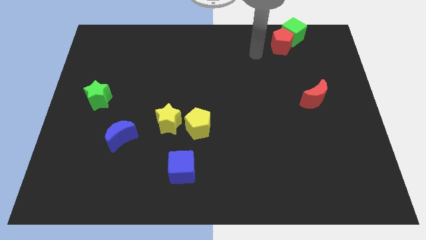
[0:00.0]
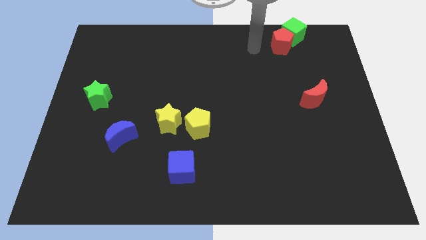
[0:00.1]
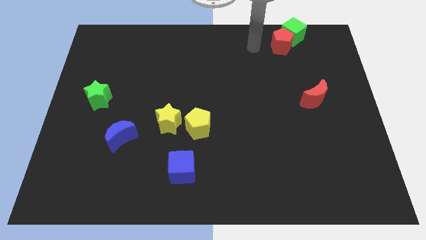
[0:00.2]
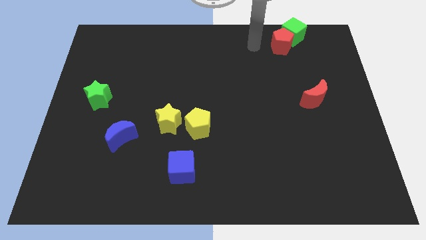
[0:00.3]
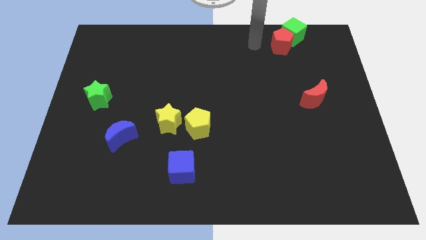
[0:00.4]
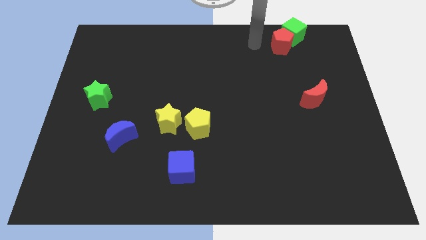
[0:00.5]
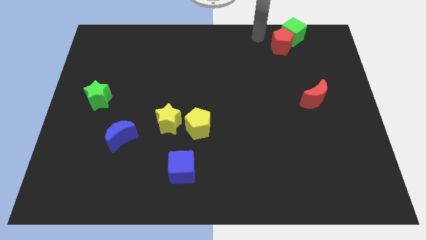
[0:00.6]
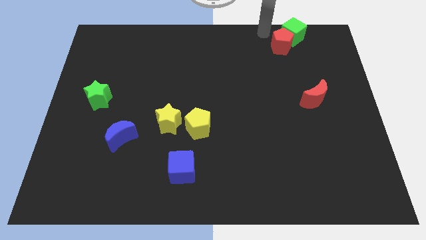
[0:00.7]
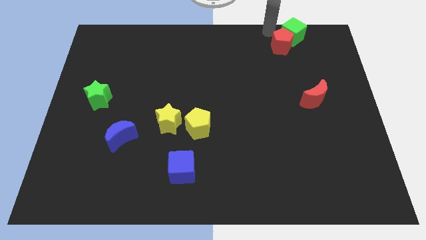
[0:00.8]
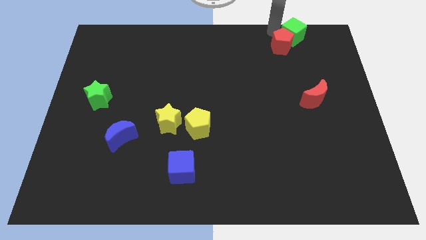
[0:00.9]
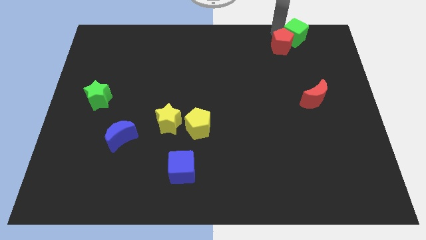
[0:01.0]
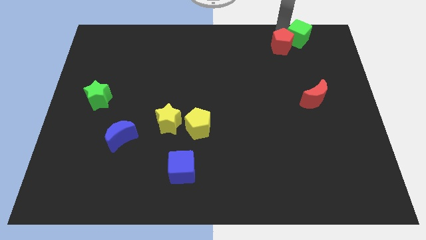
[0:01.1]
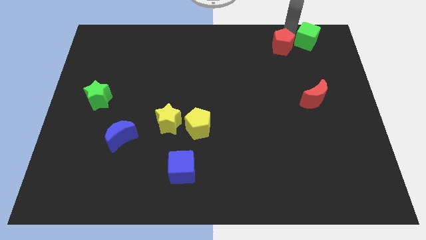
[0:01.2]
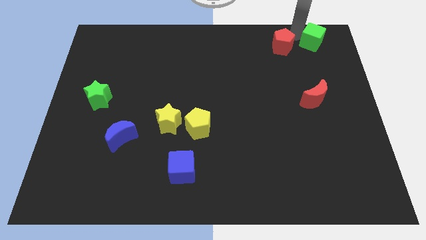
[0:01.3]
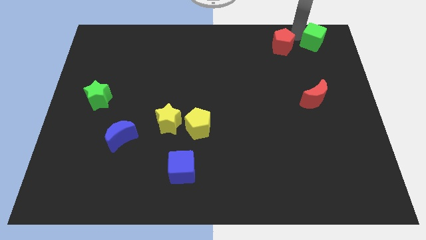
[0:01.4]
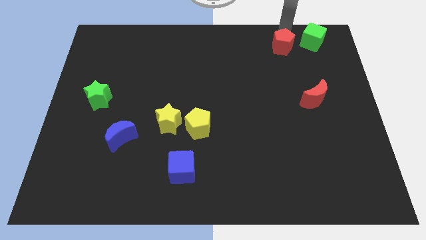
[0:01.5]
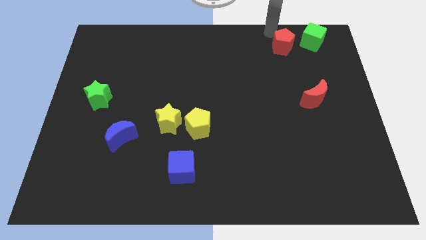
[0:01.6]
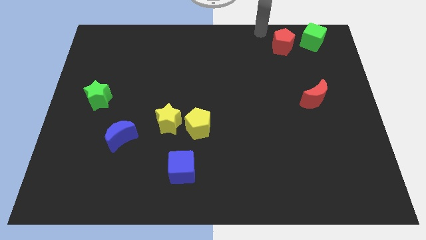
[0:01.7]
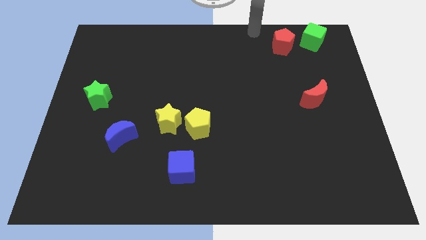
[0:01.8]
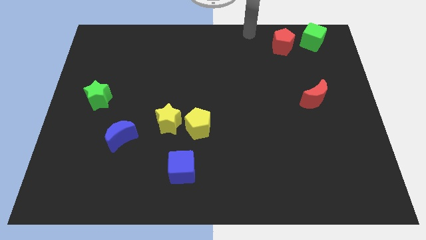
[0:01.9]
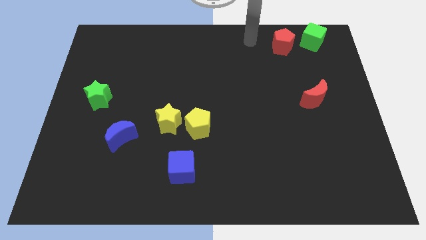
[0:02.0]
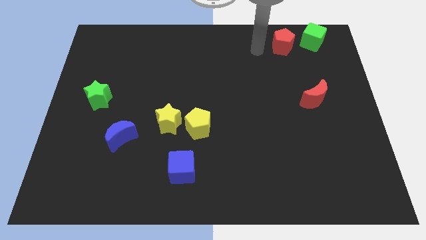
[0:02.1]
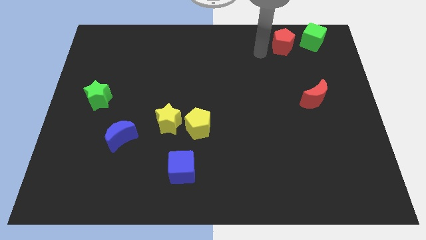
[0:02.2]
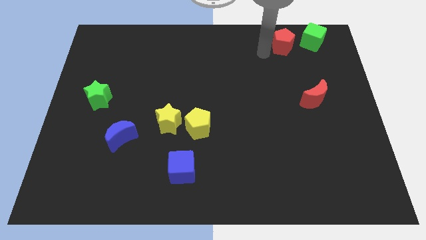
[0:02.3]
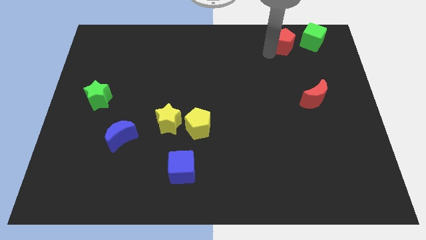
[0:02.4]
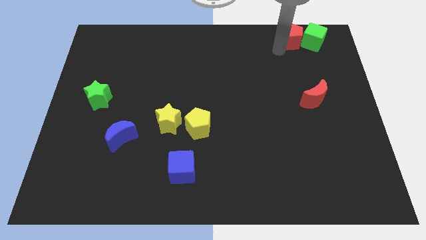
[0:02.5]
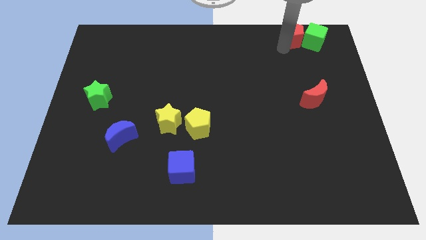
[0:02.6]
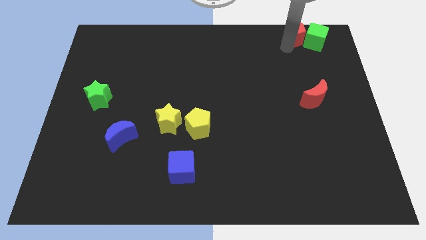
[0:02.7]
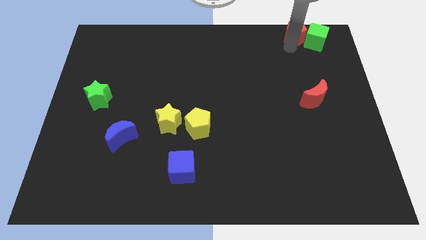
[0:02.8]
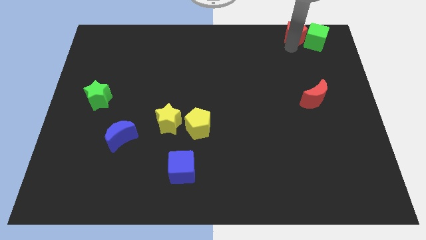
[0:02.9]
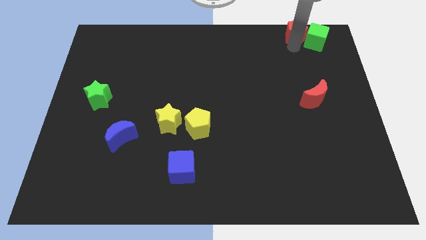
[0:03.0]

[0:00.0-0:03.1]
move red pentagon and green cube at top right corner

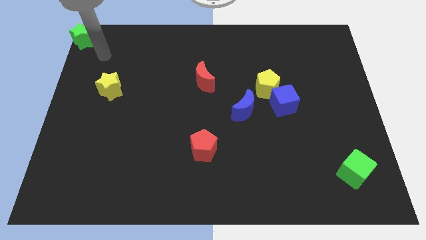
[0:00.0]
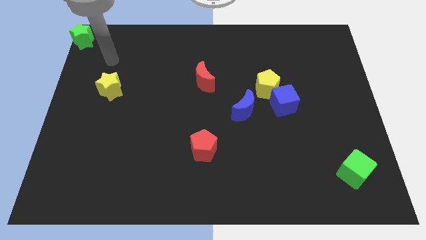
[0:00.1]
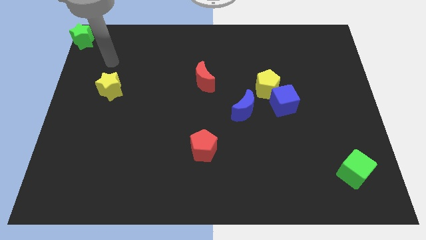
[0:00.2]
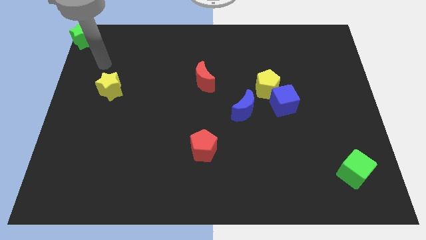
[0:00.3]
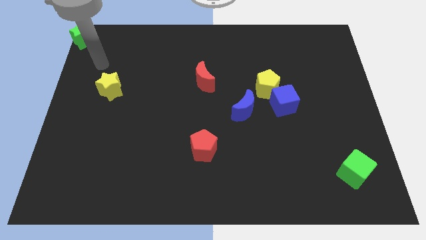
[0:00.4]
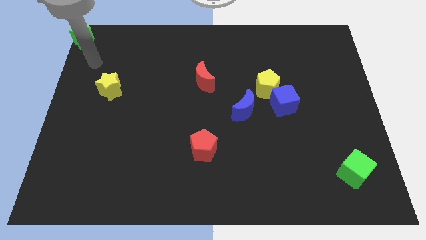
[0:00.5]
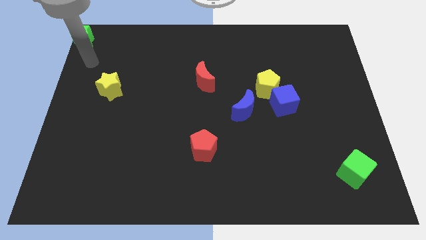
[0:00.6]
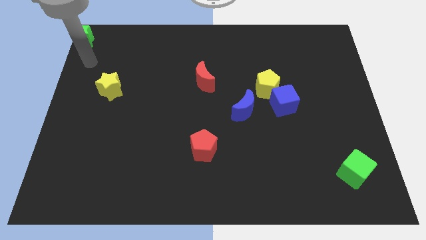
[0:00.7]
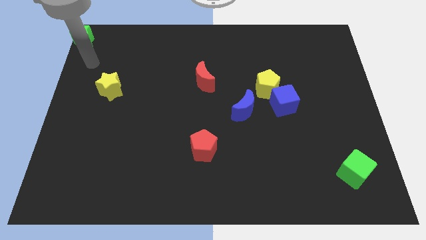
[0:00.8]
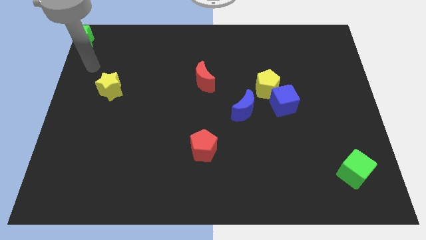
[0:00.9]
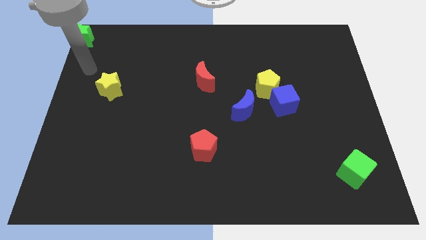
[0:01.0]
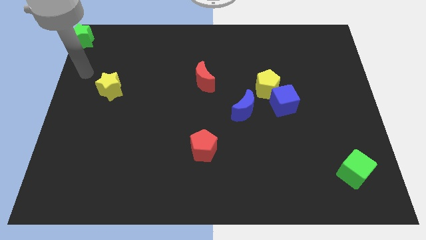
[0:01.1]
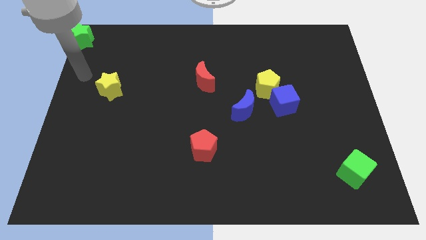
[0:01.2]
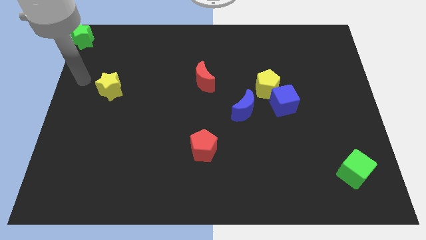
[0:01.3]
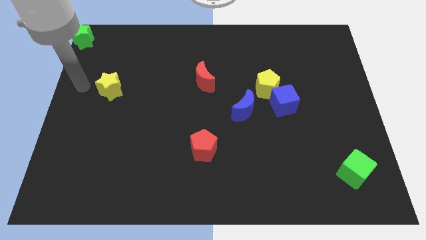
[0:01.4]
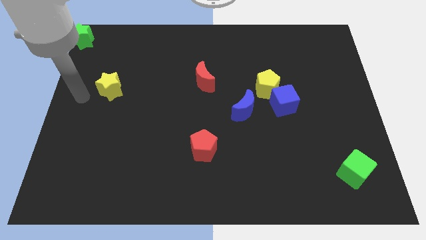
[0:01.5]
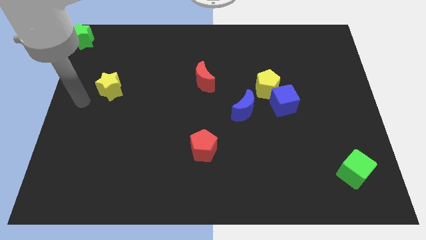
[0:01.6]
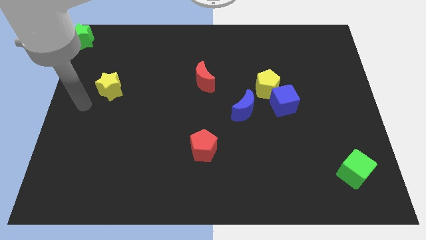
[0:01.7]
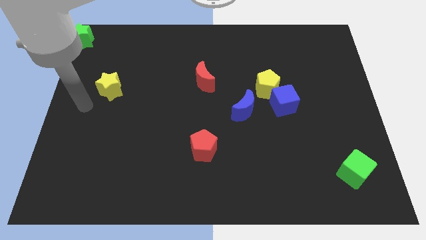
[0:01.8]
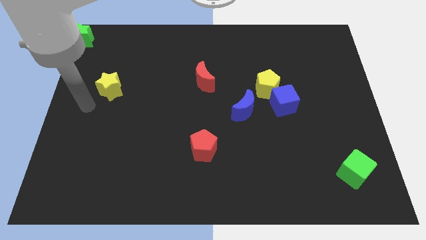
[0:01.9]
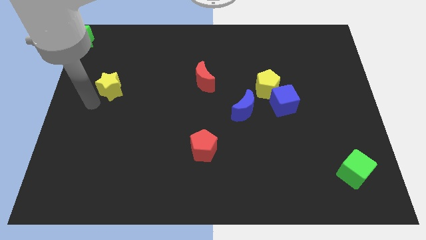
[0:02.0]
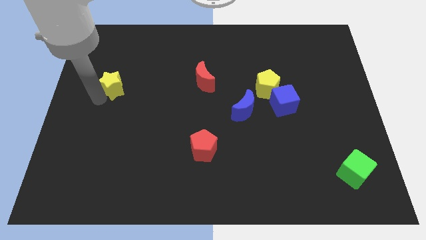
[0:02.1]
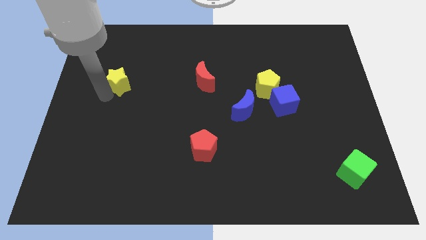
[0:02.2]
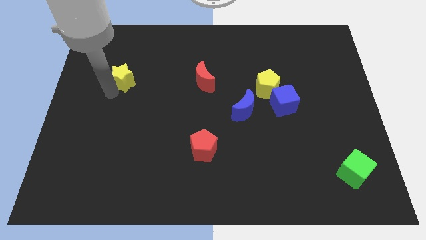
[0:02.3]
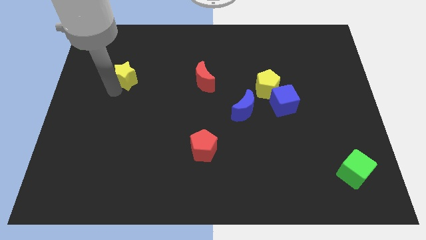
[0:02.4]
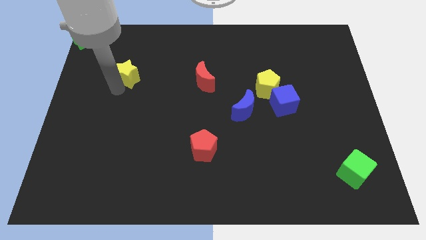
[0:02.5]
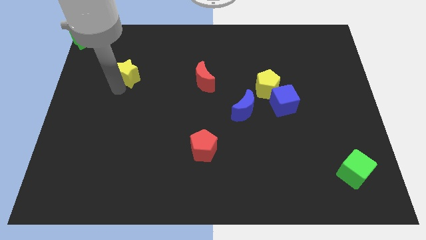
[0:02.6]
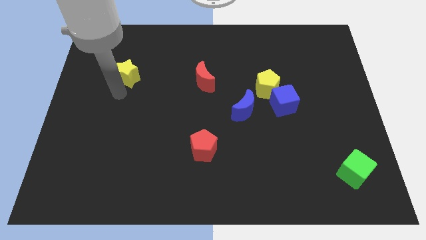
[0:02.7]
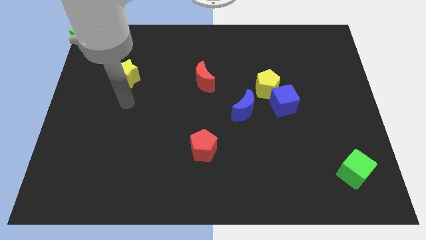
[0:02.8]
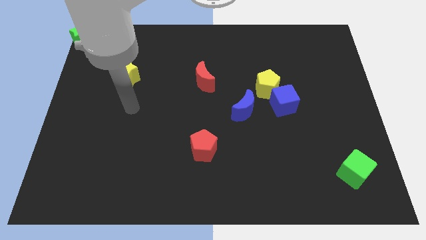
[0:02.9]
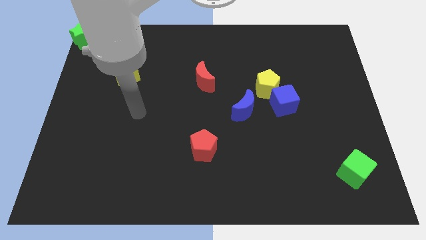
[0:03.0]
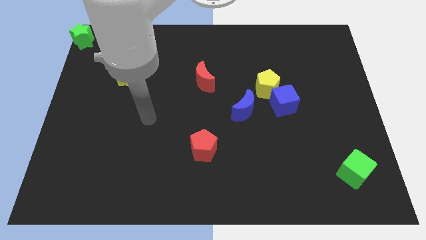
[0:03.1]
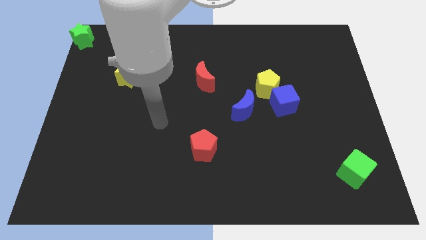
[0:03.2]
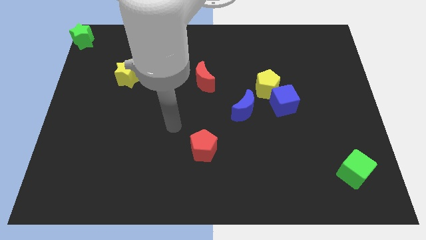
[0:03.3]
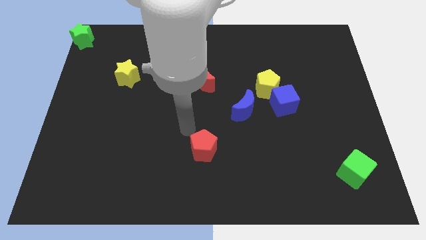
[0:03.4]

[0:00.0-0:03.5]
slide the yellow star up slightly

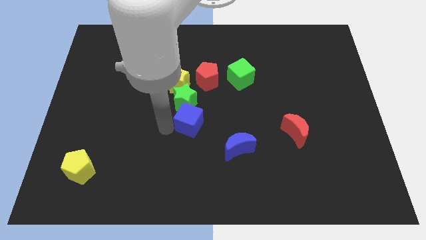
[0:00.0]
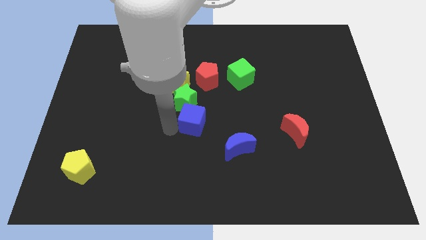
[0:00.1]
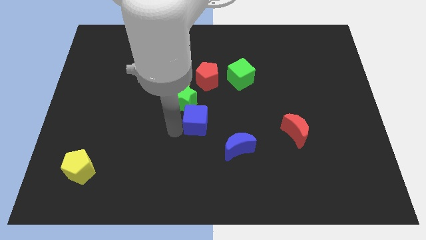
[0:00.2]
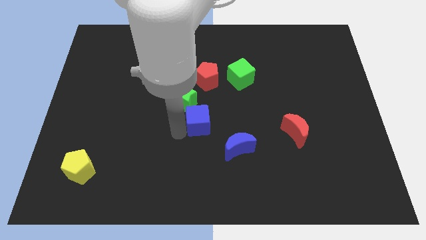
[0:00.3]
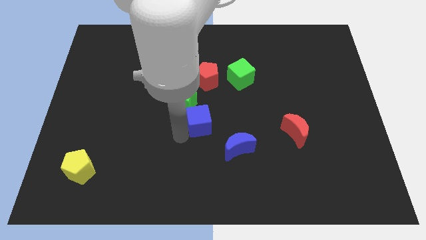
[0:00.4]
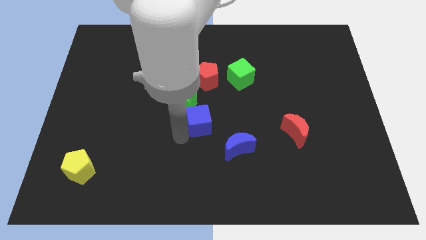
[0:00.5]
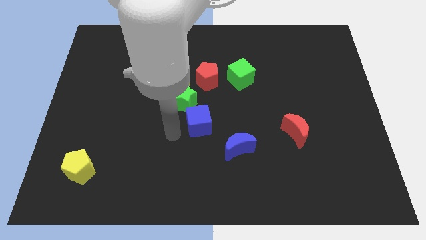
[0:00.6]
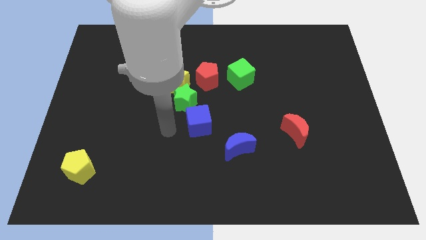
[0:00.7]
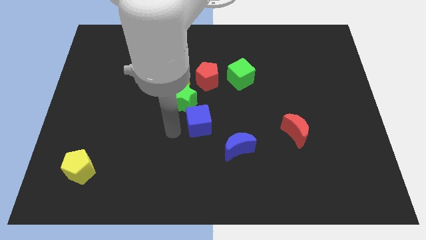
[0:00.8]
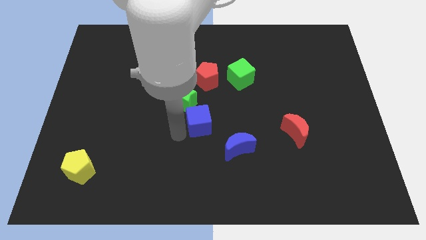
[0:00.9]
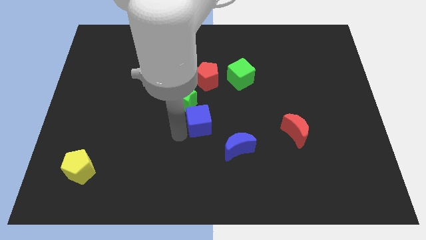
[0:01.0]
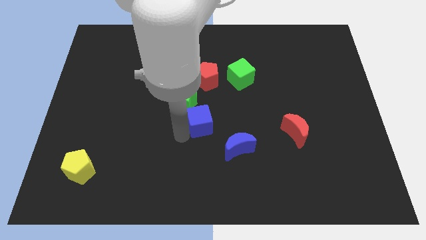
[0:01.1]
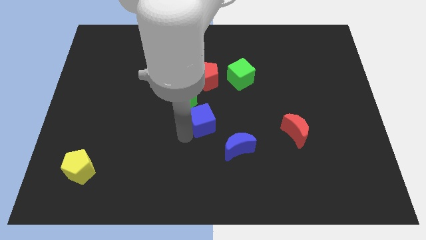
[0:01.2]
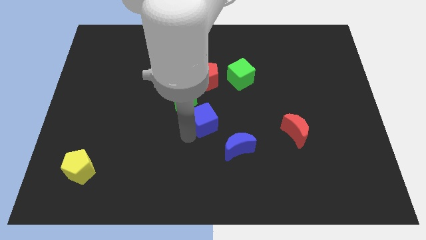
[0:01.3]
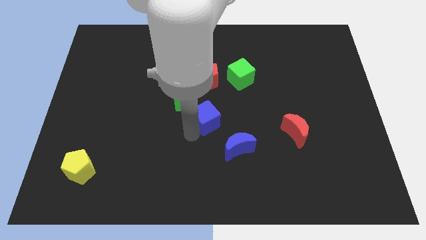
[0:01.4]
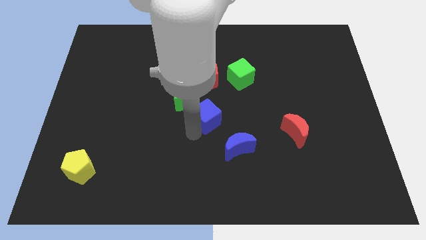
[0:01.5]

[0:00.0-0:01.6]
slide the blue cube between green star and blue moon

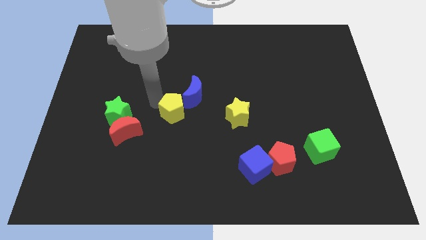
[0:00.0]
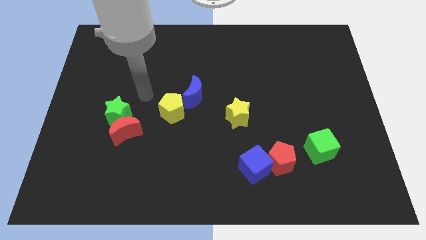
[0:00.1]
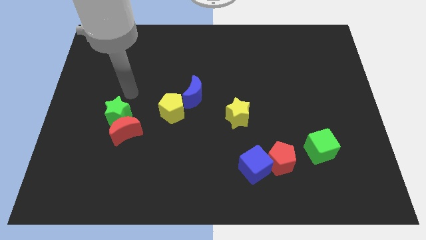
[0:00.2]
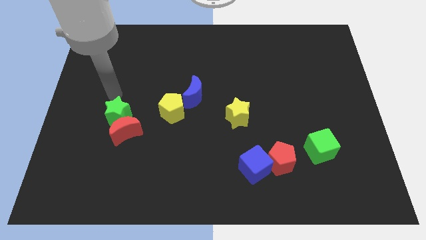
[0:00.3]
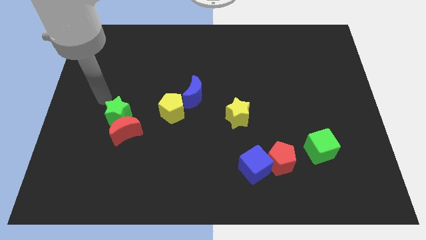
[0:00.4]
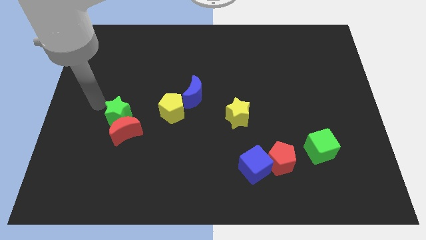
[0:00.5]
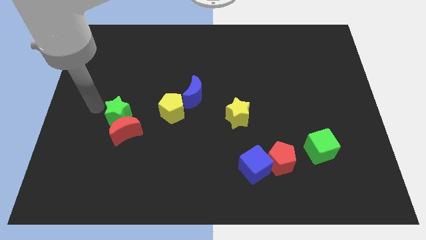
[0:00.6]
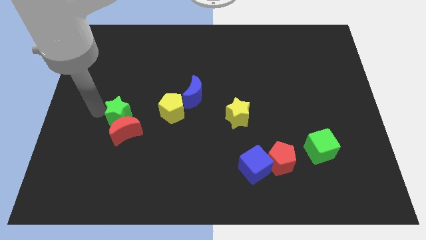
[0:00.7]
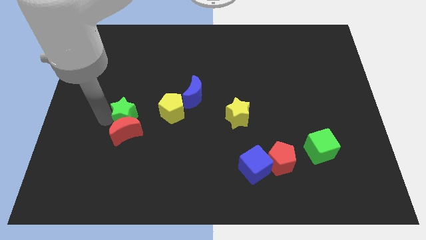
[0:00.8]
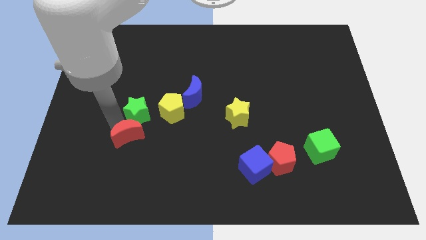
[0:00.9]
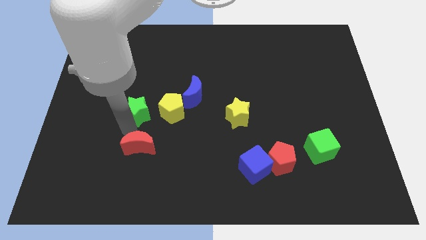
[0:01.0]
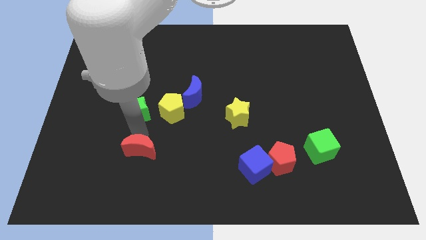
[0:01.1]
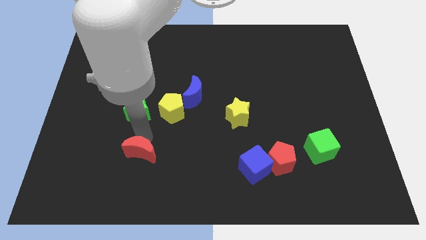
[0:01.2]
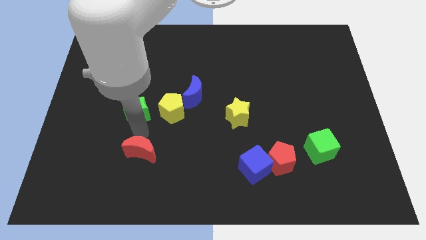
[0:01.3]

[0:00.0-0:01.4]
move green star close to the yellow pentagon
